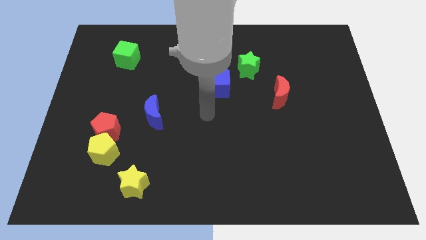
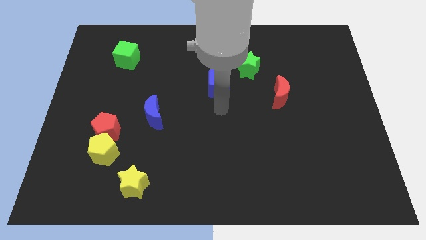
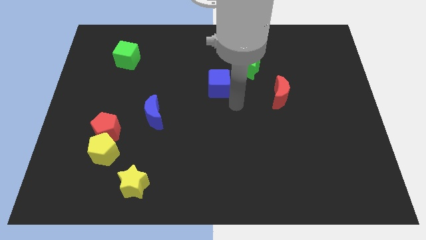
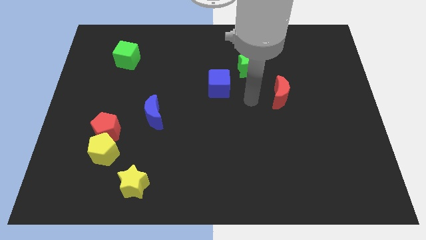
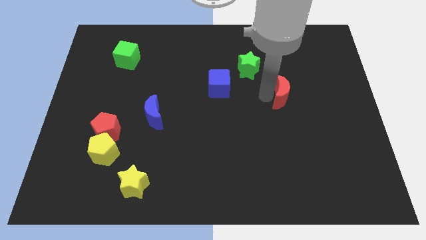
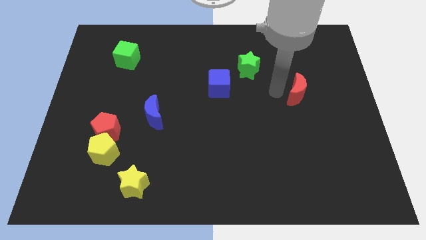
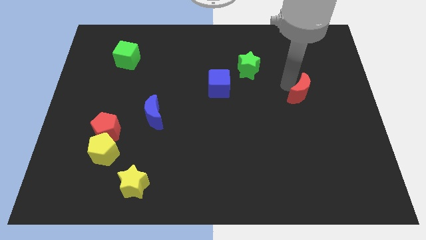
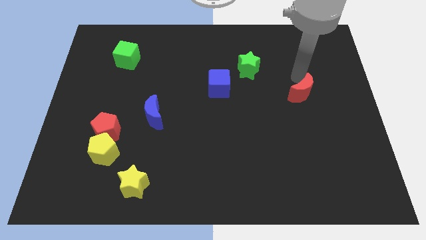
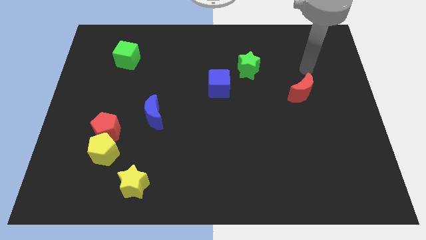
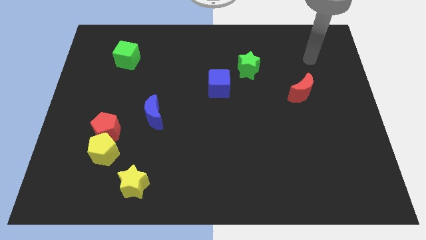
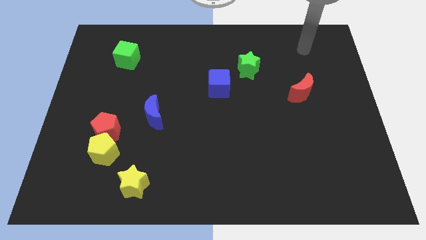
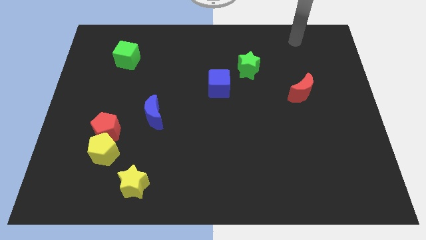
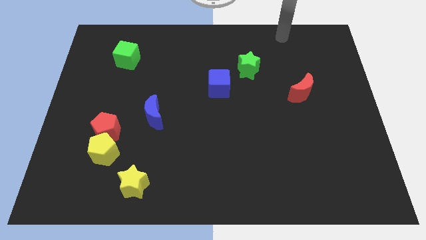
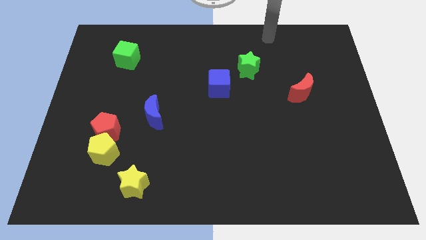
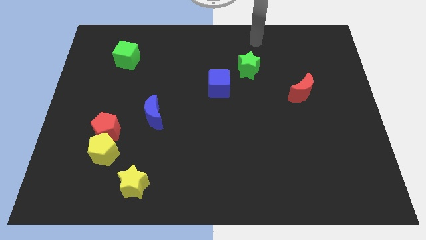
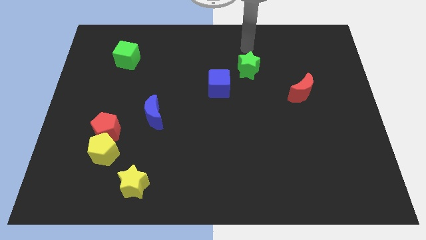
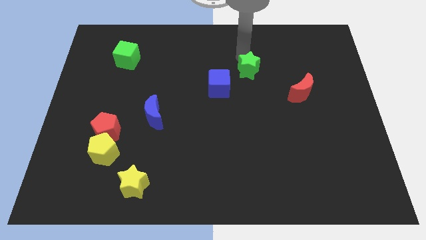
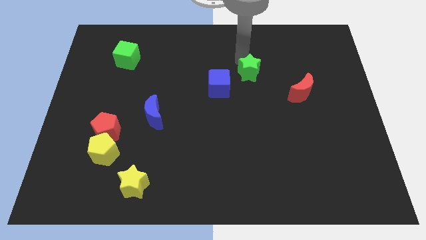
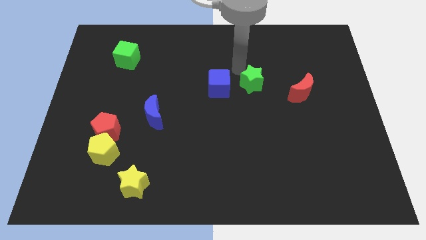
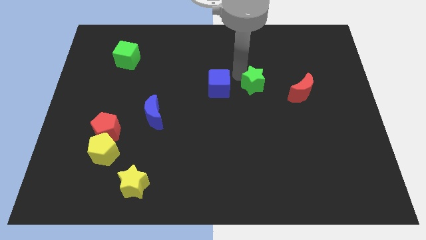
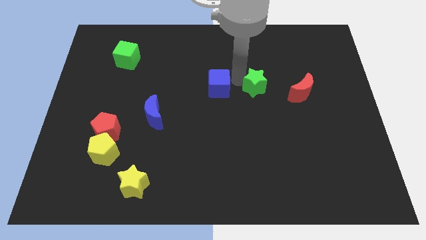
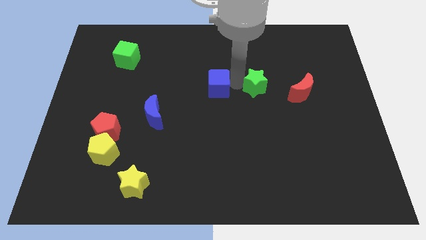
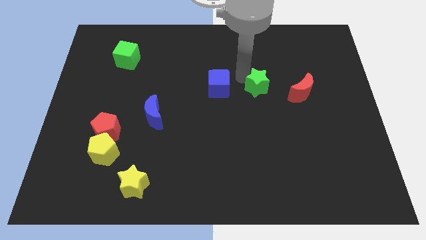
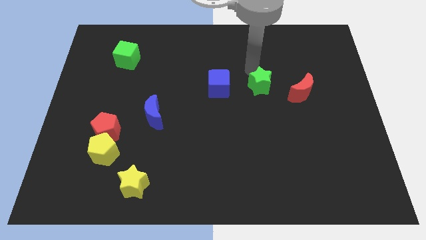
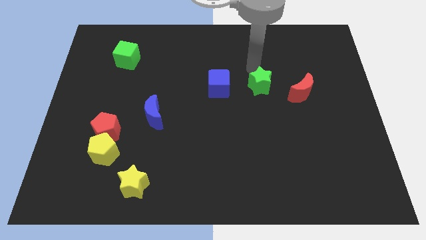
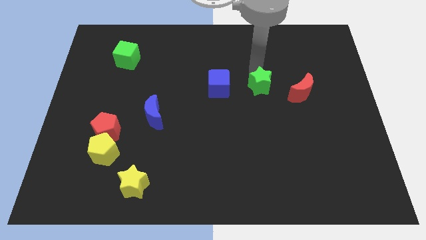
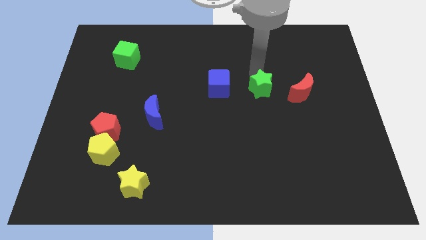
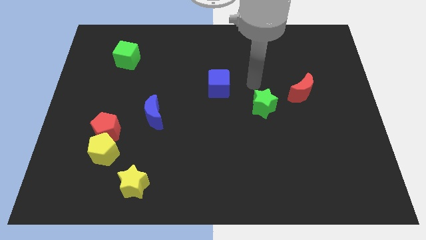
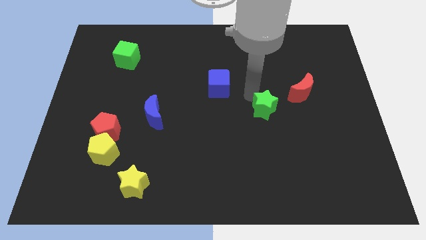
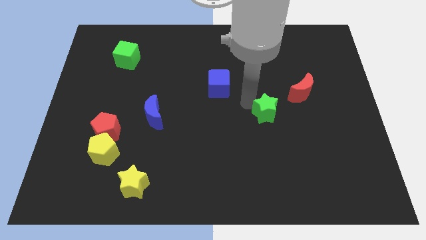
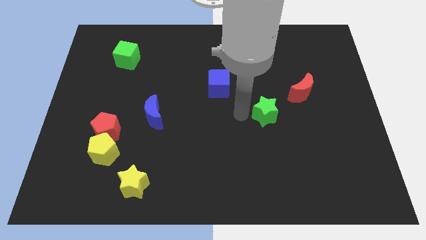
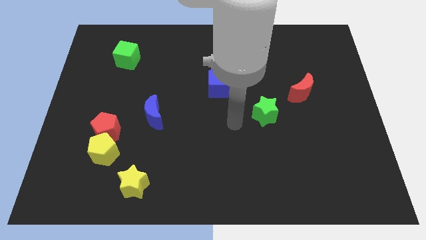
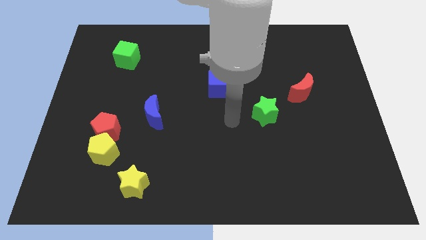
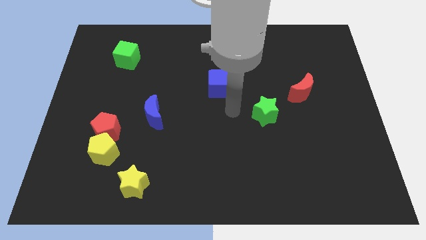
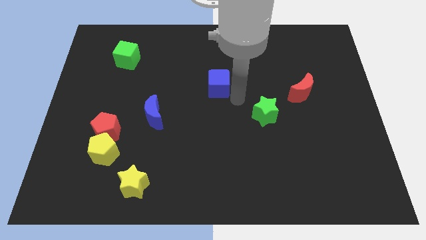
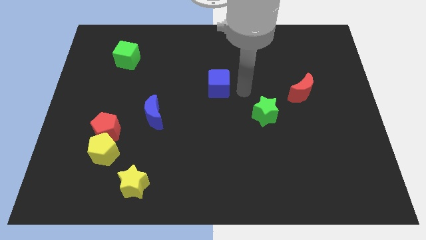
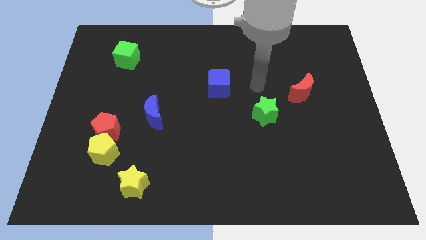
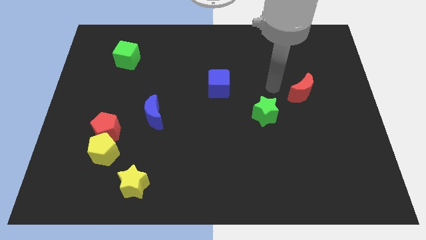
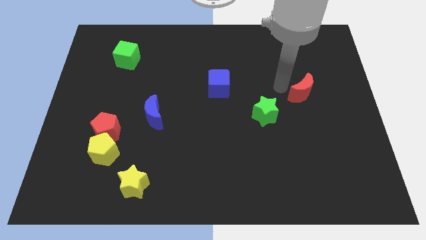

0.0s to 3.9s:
push green star diagonally to the bottom left of the red crescent

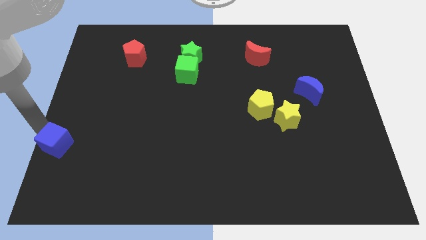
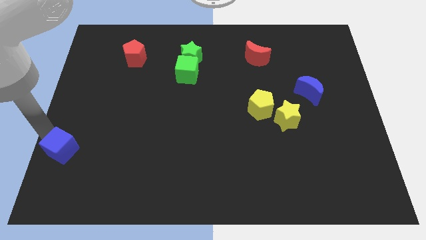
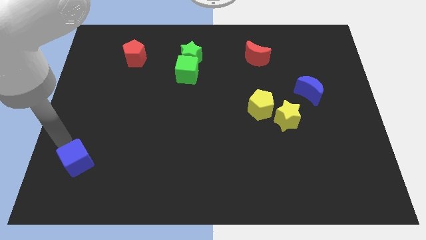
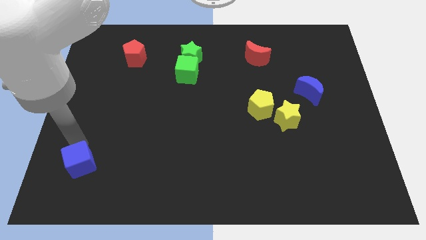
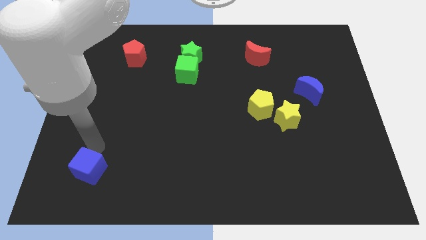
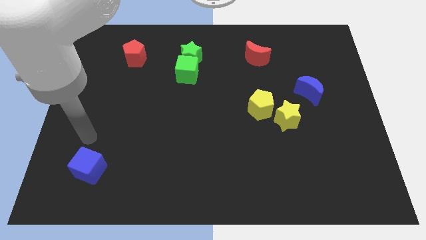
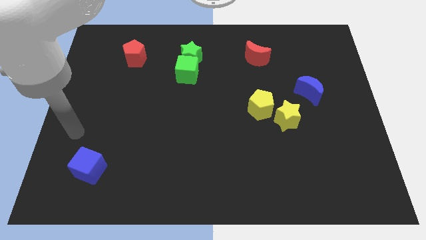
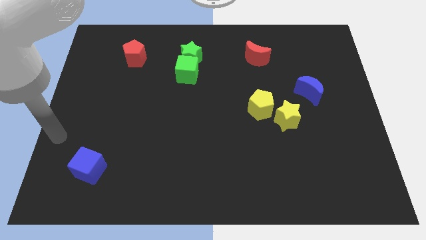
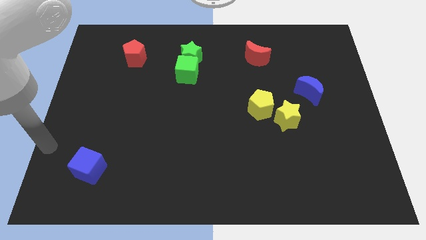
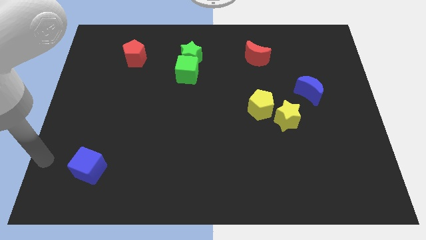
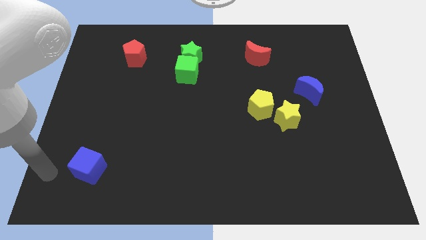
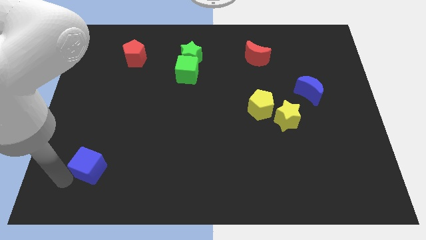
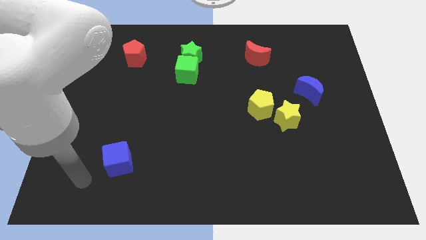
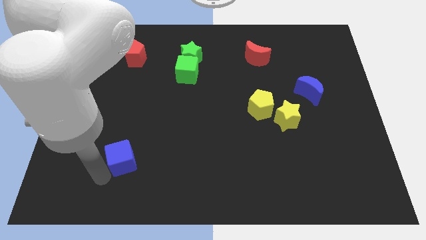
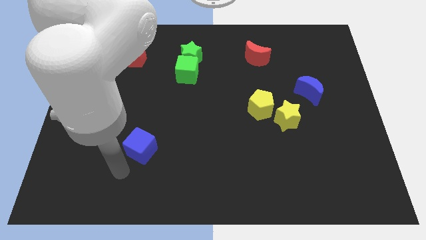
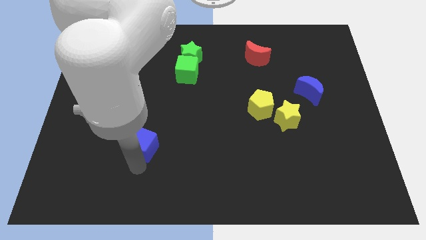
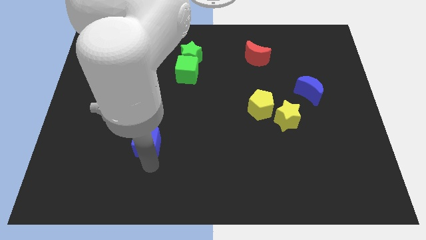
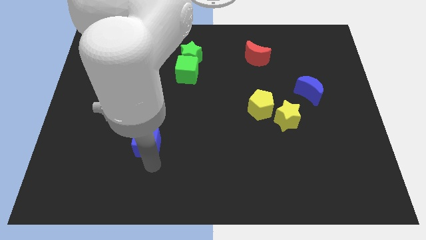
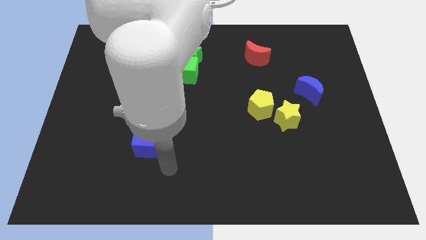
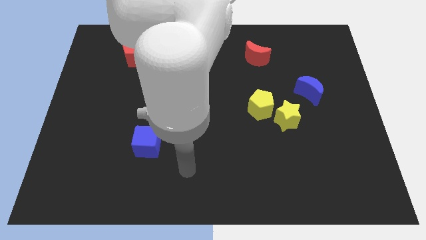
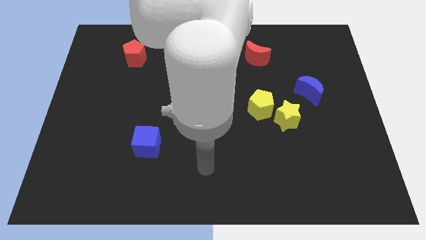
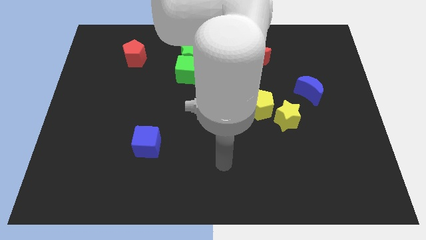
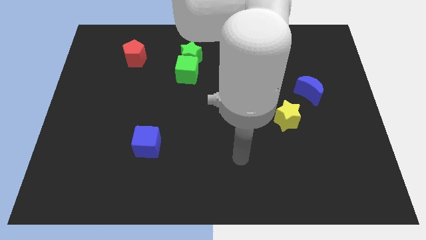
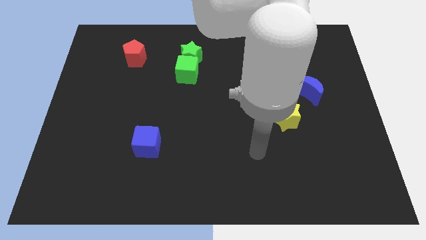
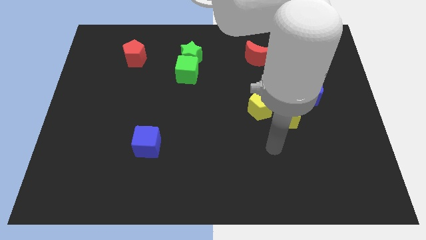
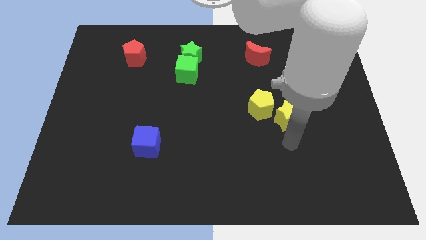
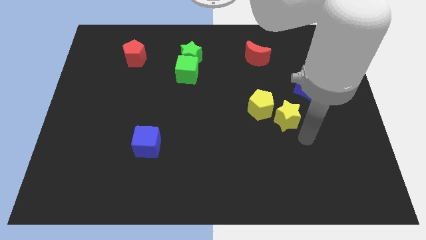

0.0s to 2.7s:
push the blue cube towards the center of the board and move away

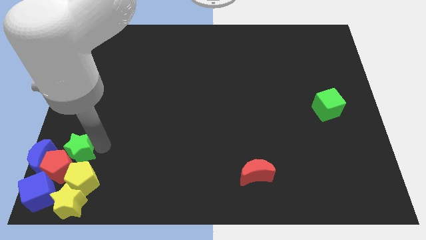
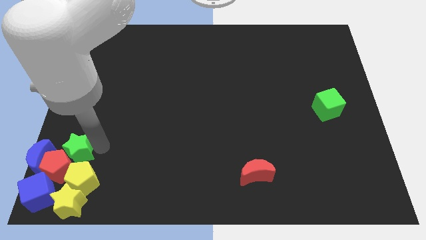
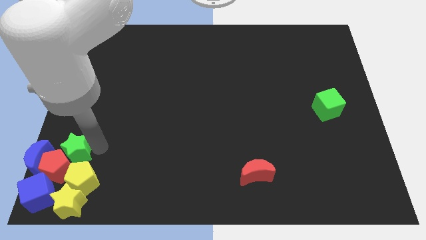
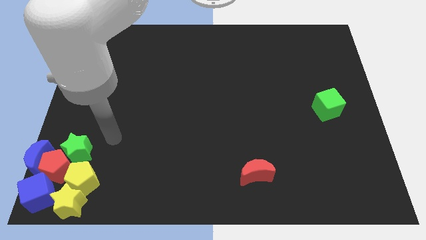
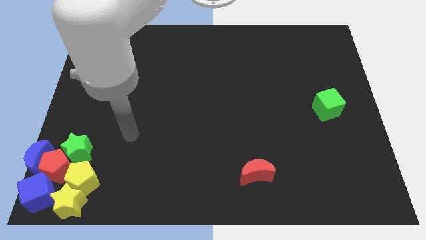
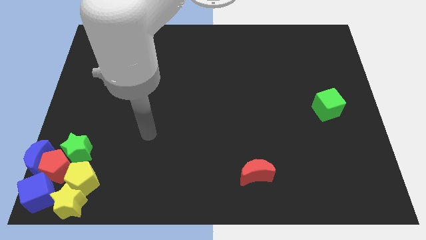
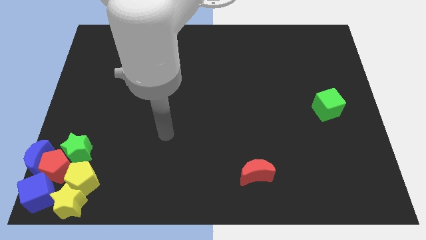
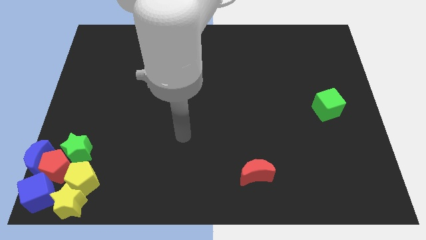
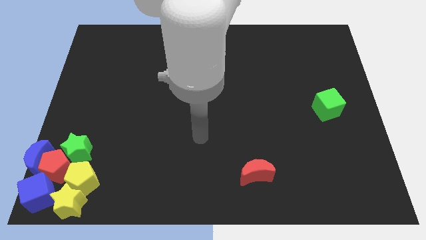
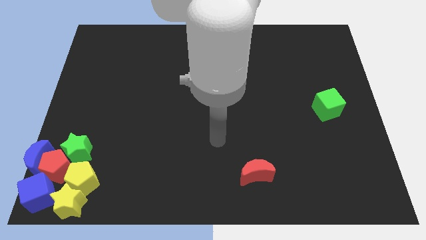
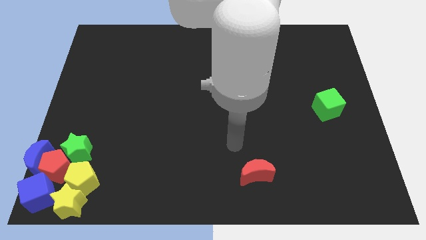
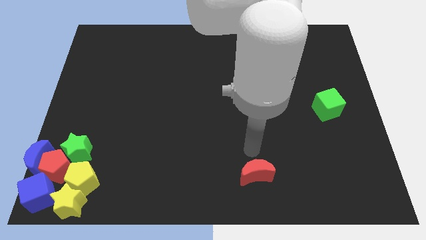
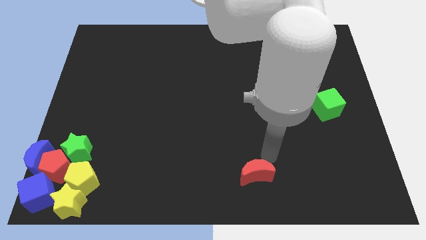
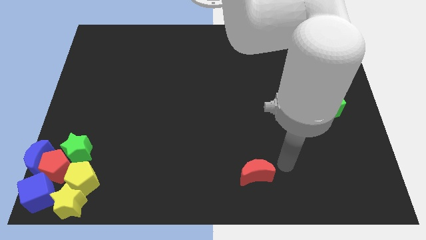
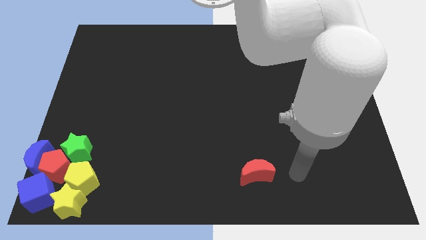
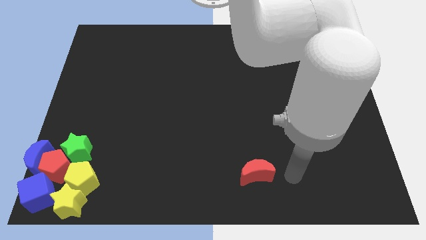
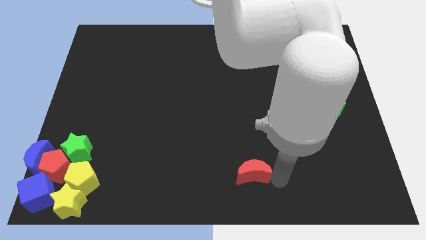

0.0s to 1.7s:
move your arm towards the red crescent

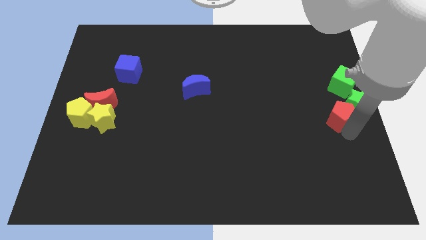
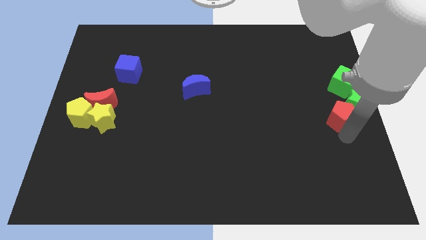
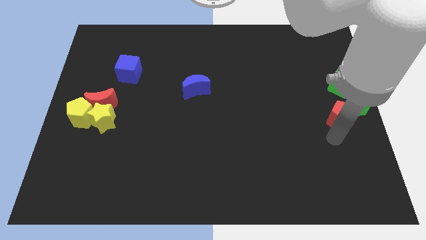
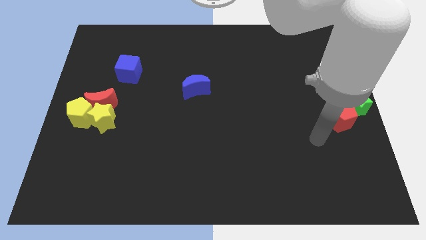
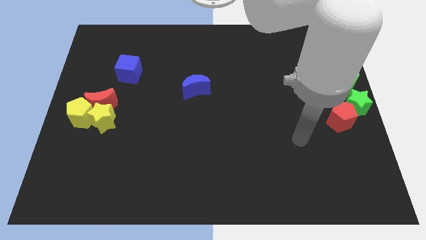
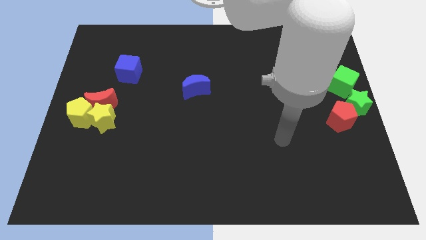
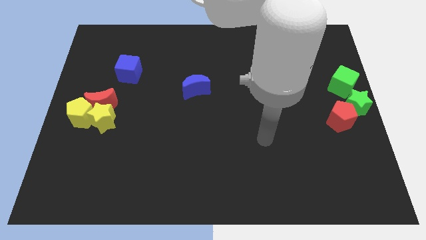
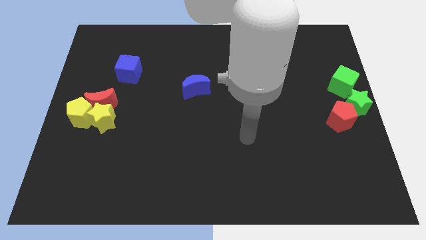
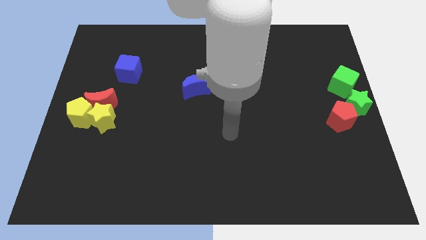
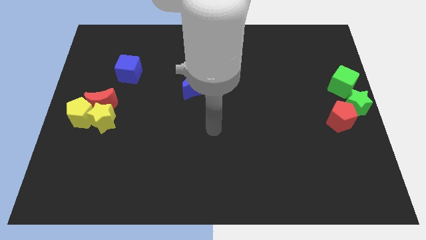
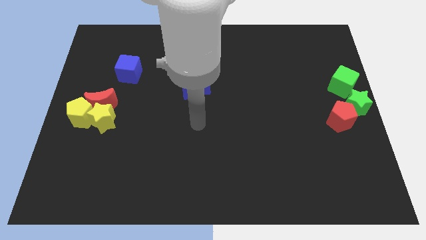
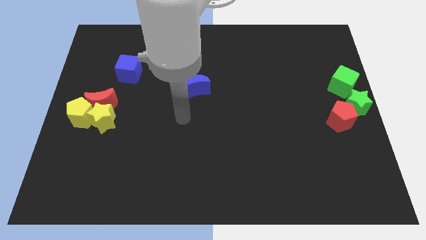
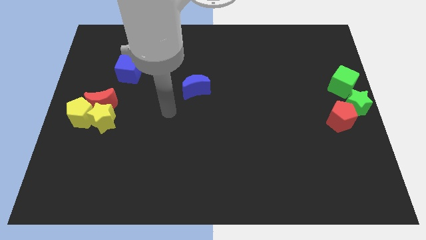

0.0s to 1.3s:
move the arm way from the red pentagon
